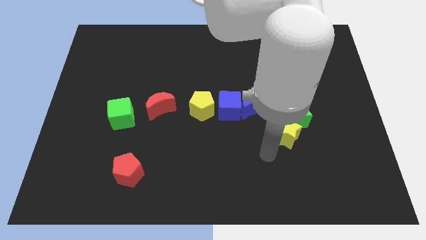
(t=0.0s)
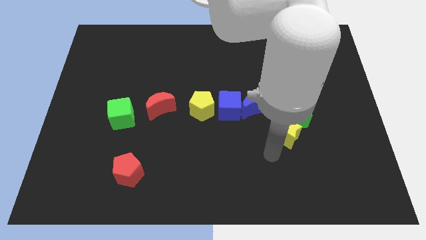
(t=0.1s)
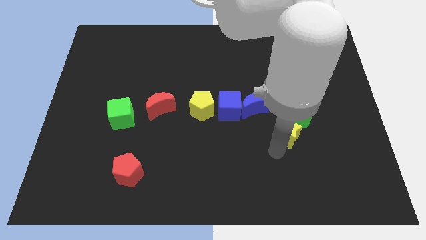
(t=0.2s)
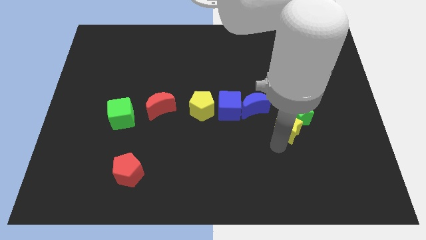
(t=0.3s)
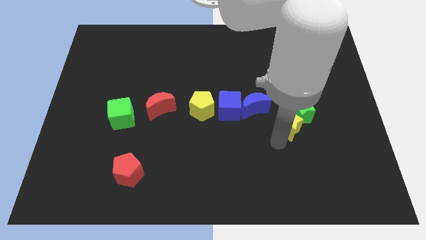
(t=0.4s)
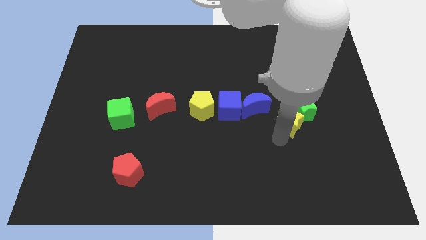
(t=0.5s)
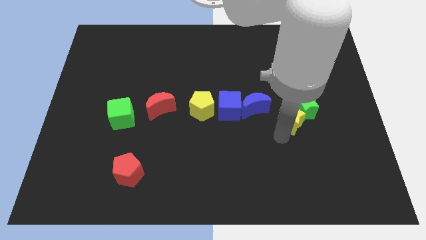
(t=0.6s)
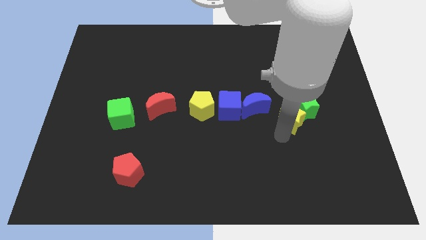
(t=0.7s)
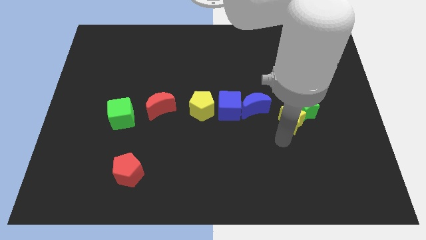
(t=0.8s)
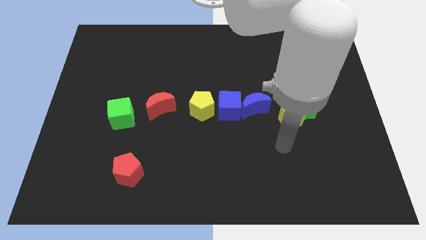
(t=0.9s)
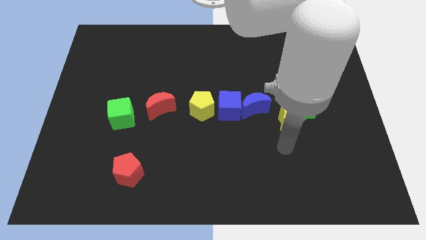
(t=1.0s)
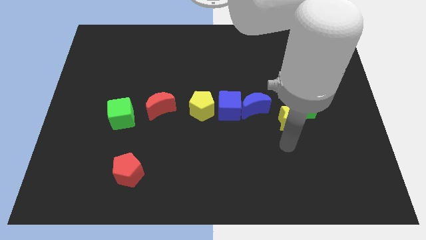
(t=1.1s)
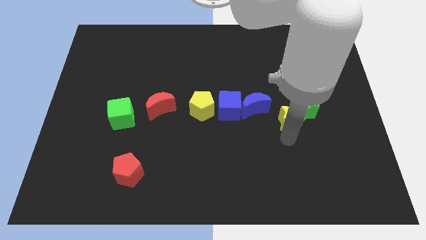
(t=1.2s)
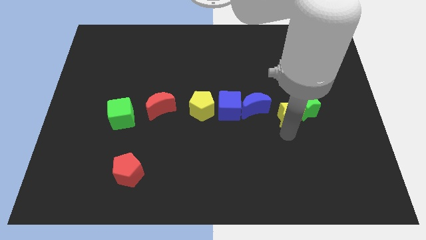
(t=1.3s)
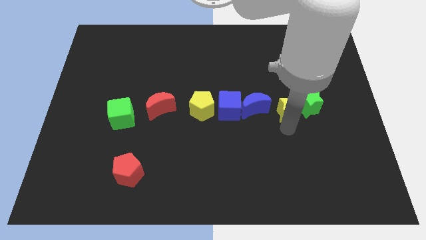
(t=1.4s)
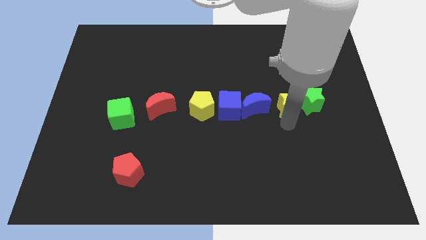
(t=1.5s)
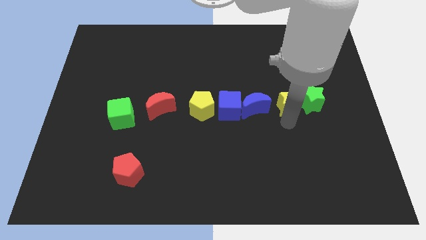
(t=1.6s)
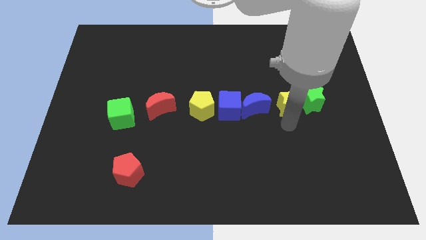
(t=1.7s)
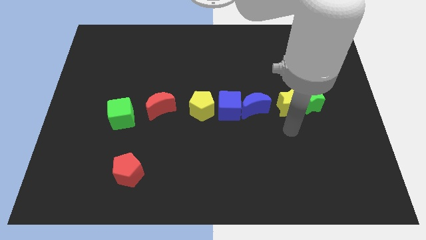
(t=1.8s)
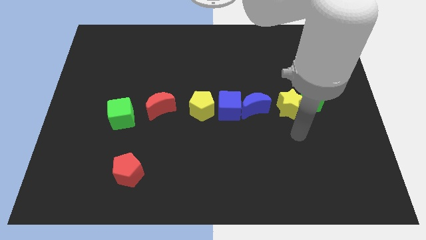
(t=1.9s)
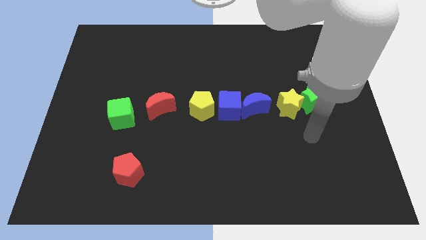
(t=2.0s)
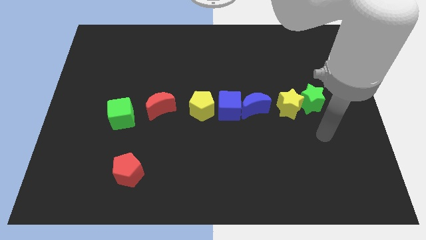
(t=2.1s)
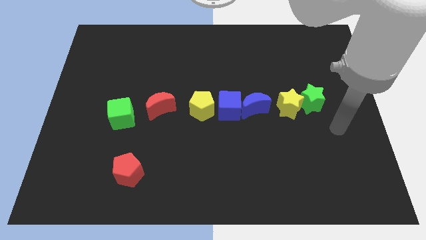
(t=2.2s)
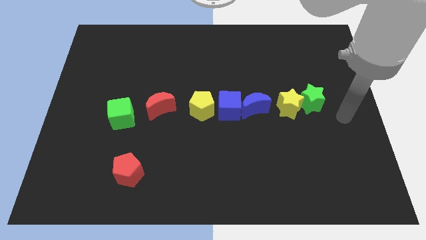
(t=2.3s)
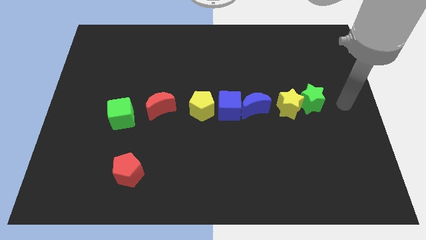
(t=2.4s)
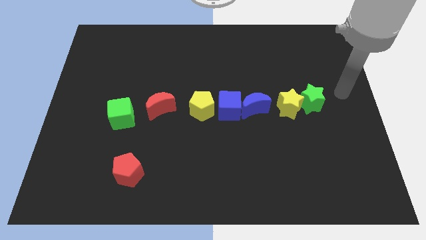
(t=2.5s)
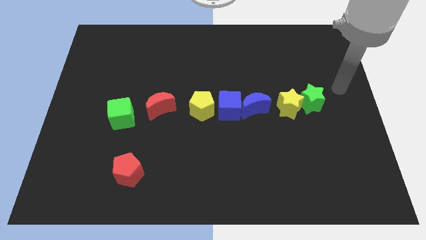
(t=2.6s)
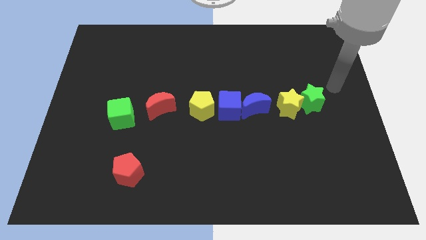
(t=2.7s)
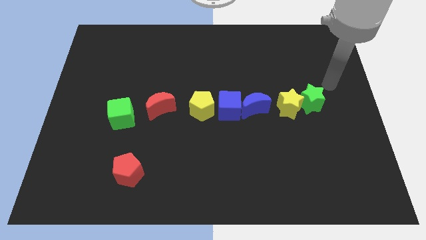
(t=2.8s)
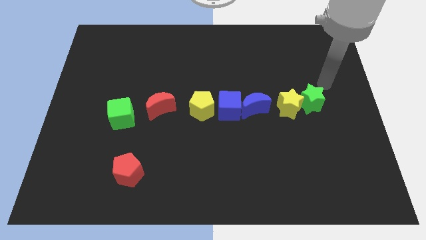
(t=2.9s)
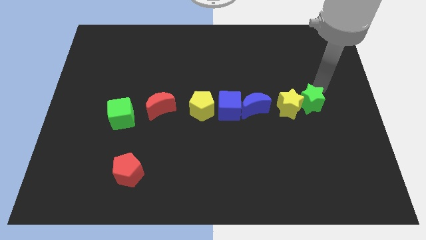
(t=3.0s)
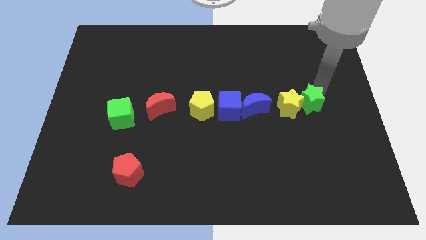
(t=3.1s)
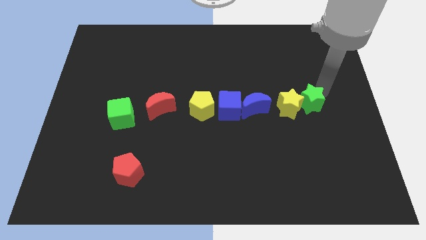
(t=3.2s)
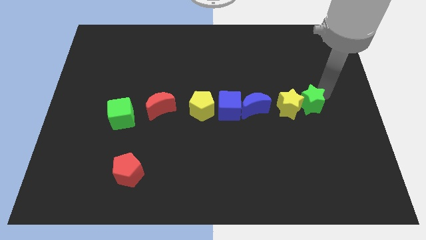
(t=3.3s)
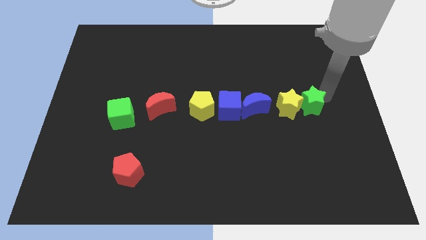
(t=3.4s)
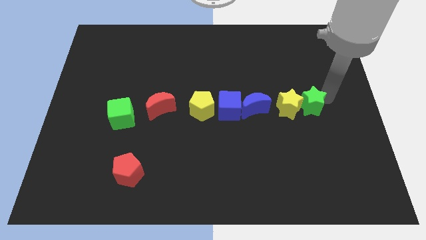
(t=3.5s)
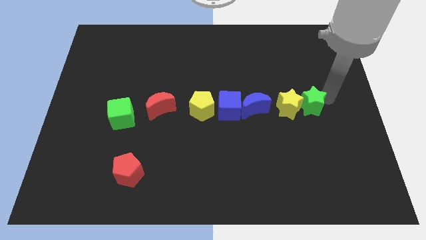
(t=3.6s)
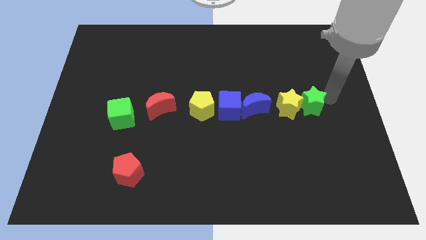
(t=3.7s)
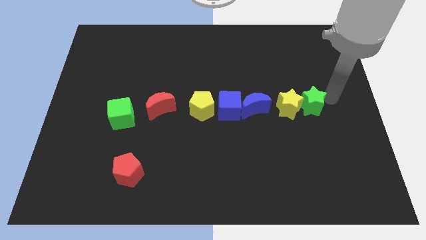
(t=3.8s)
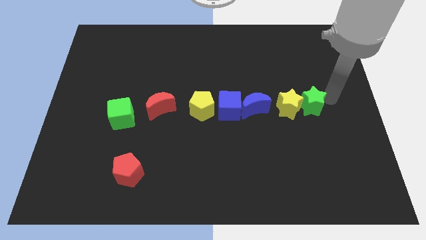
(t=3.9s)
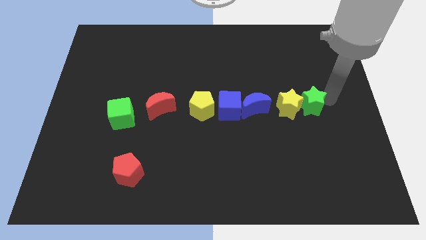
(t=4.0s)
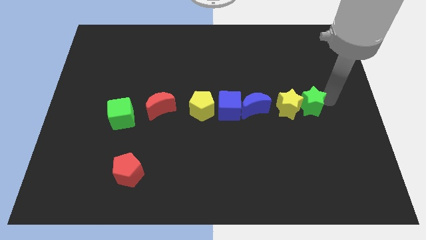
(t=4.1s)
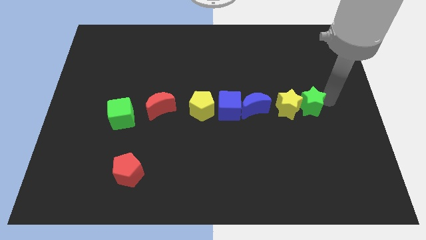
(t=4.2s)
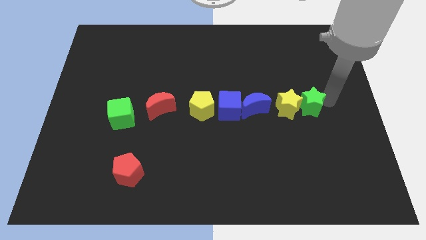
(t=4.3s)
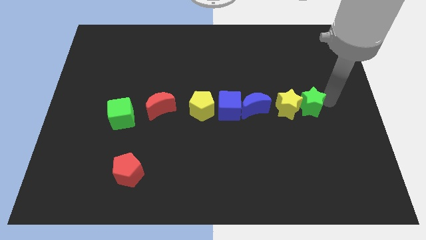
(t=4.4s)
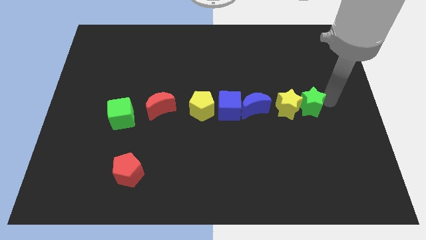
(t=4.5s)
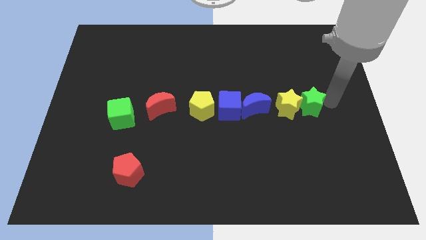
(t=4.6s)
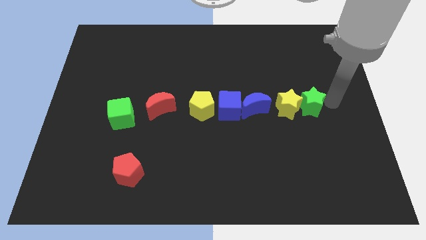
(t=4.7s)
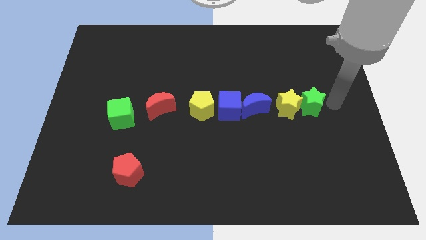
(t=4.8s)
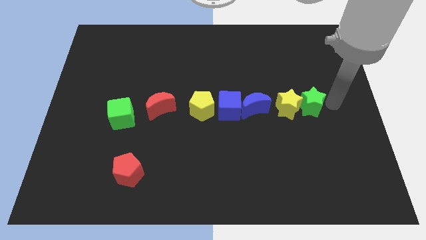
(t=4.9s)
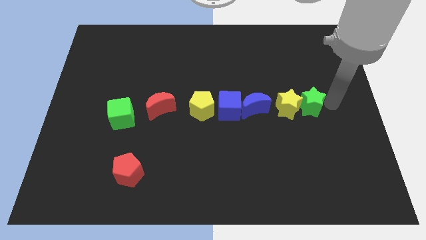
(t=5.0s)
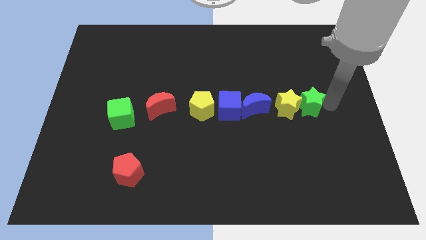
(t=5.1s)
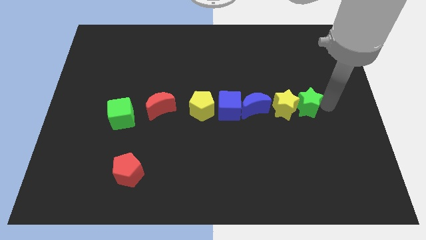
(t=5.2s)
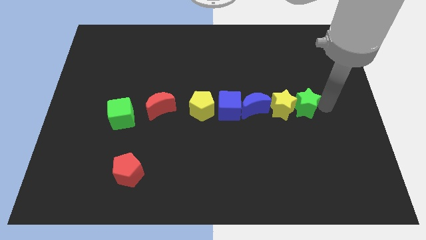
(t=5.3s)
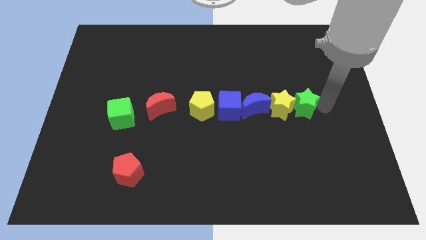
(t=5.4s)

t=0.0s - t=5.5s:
place the yellow star in between the green star and the blue crescent

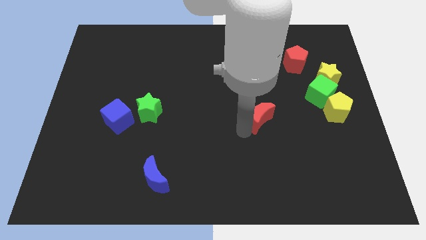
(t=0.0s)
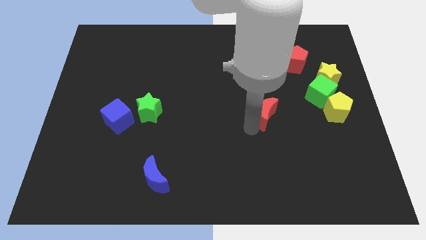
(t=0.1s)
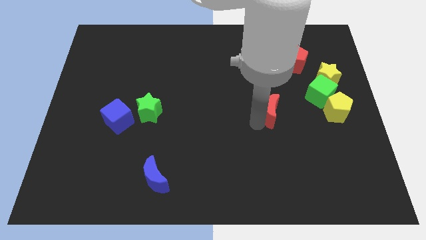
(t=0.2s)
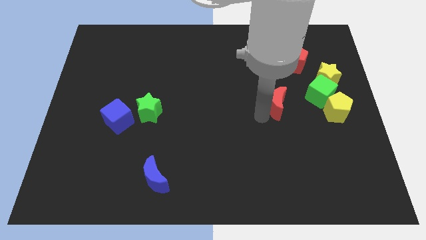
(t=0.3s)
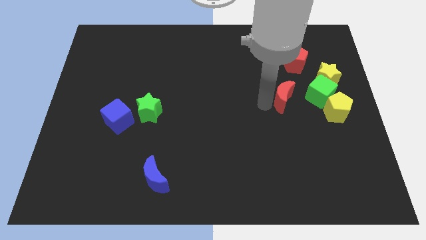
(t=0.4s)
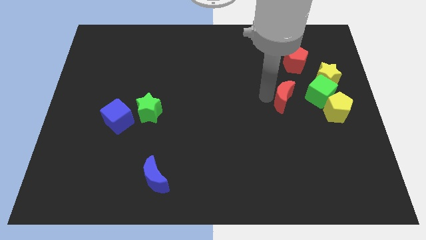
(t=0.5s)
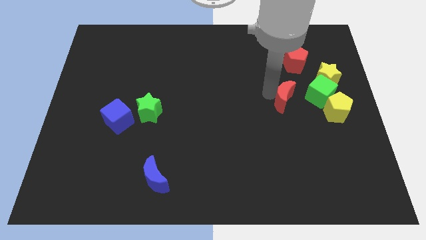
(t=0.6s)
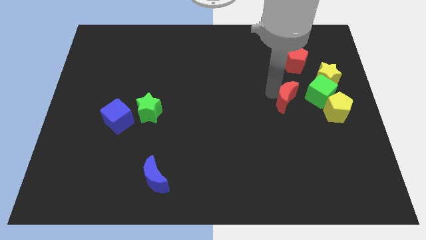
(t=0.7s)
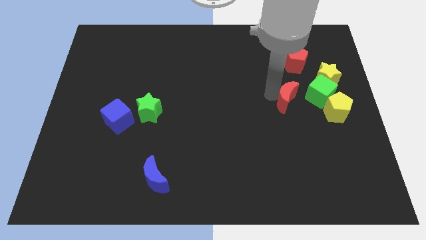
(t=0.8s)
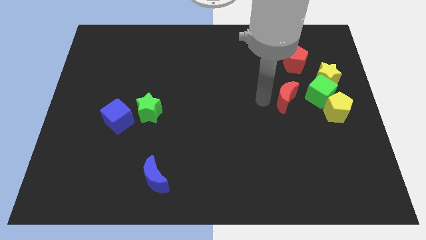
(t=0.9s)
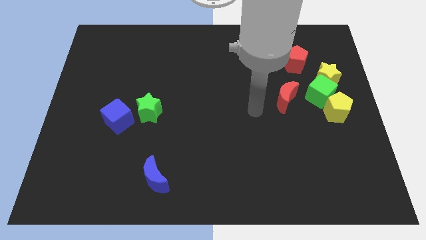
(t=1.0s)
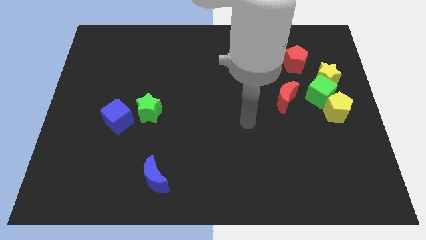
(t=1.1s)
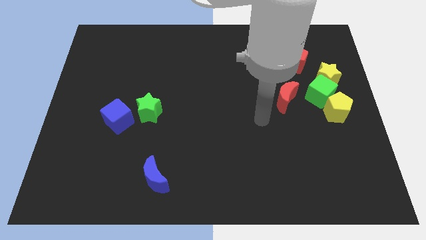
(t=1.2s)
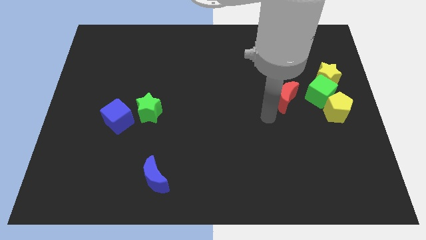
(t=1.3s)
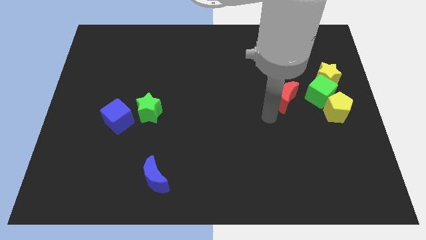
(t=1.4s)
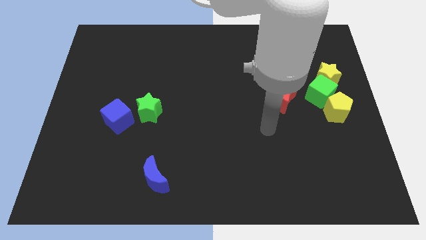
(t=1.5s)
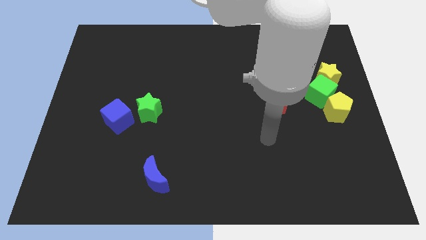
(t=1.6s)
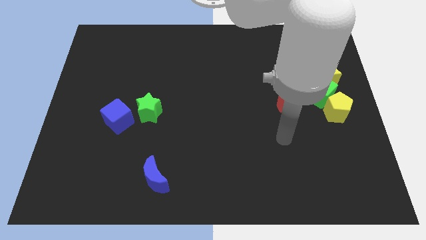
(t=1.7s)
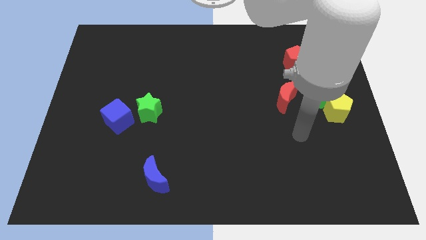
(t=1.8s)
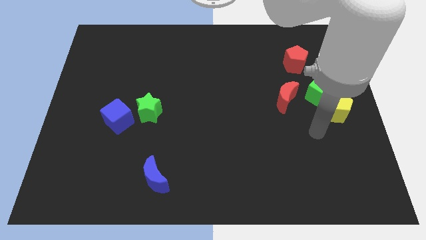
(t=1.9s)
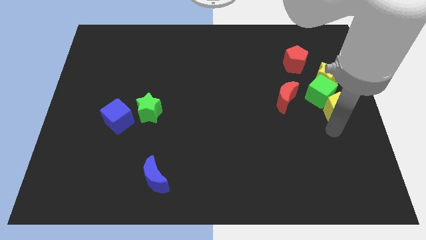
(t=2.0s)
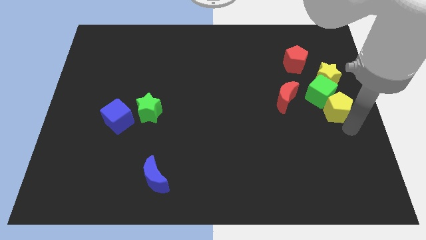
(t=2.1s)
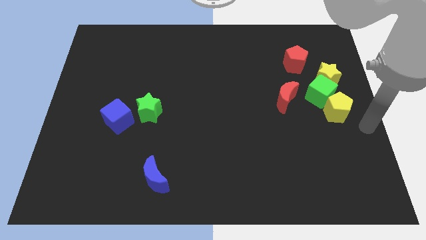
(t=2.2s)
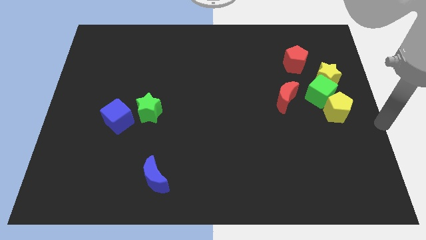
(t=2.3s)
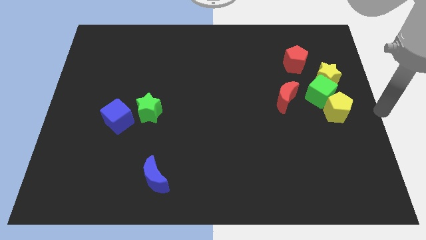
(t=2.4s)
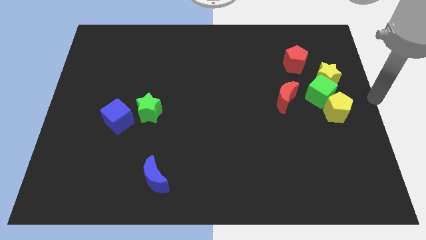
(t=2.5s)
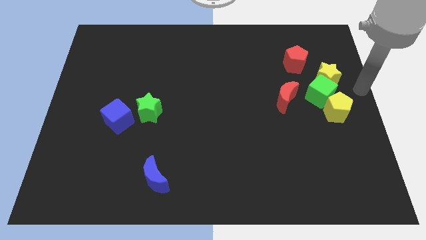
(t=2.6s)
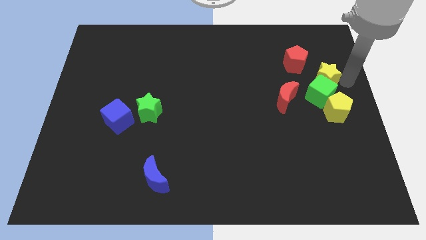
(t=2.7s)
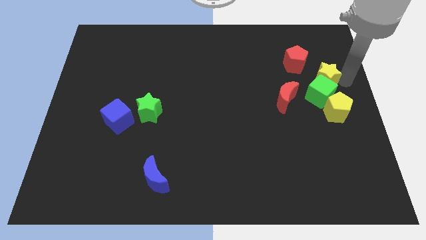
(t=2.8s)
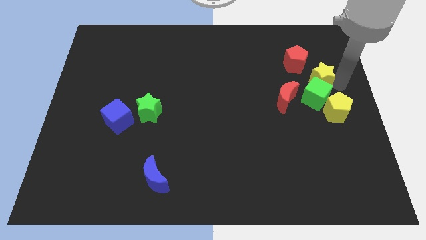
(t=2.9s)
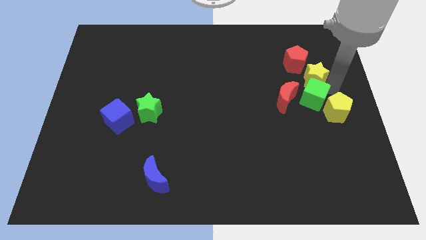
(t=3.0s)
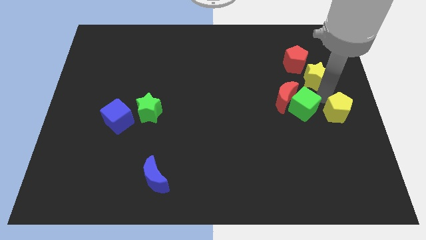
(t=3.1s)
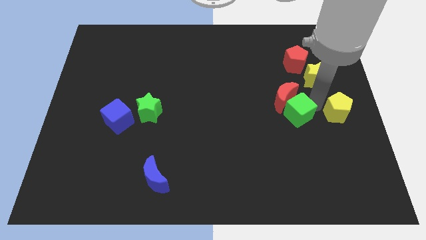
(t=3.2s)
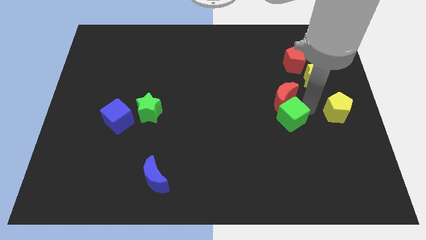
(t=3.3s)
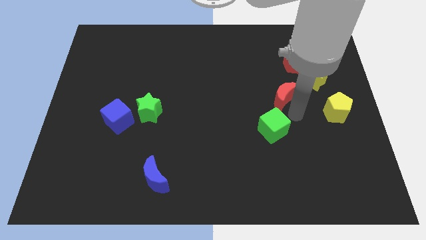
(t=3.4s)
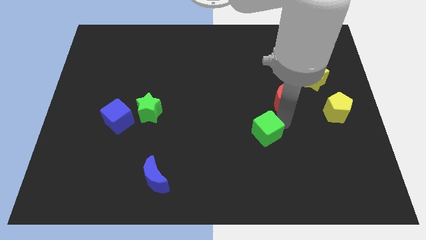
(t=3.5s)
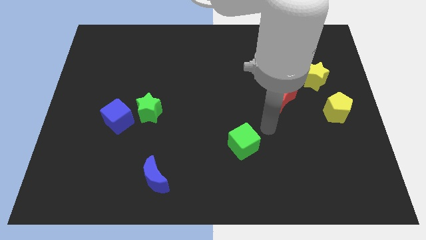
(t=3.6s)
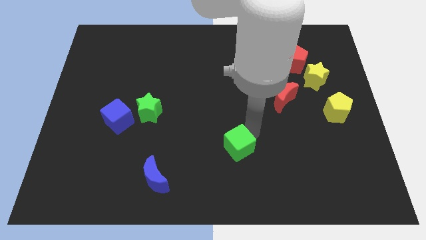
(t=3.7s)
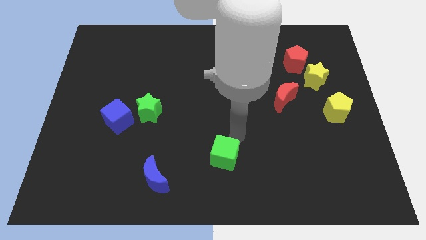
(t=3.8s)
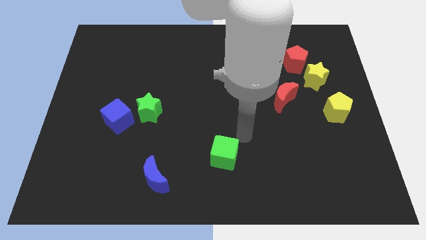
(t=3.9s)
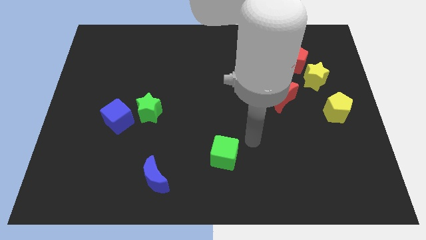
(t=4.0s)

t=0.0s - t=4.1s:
slide the green cube towards the blue crescent
